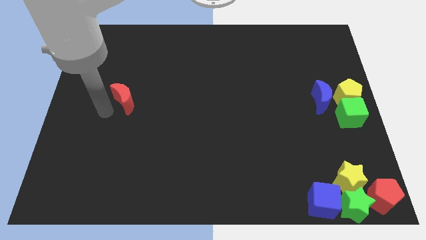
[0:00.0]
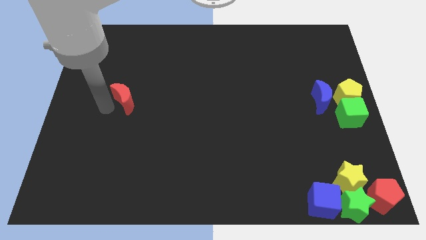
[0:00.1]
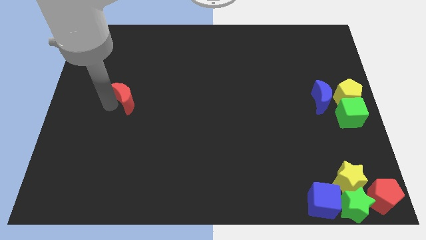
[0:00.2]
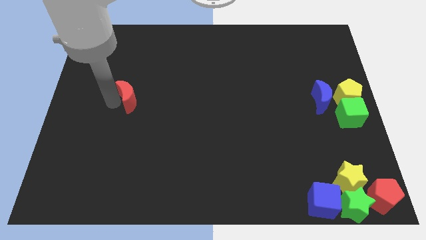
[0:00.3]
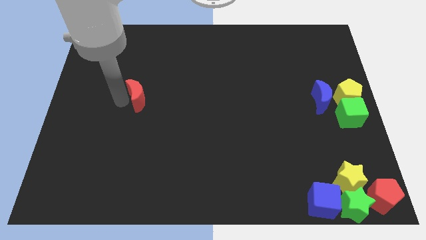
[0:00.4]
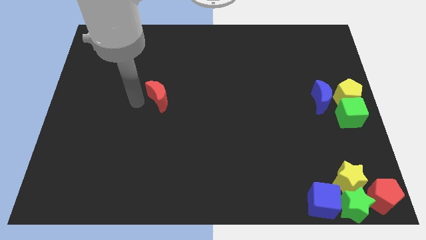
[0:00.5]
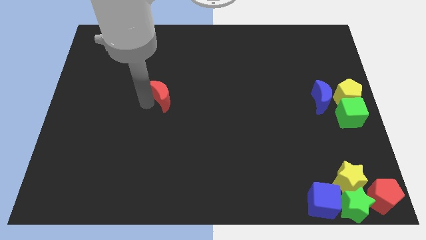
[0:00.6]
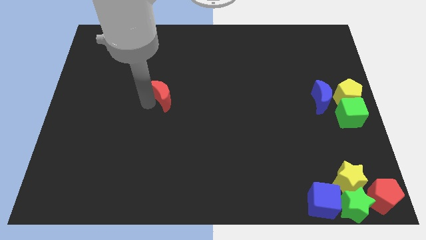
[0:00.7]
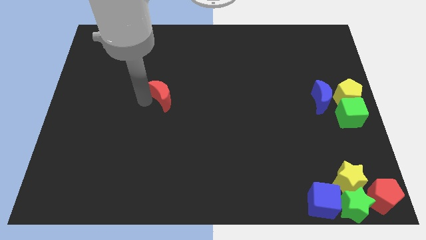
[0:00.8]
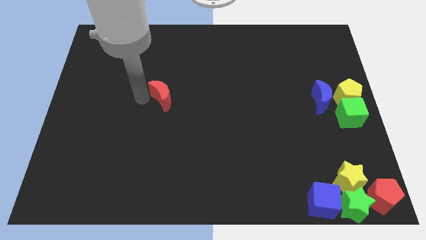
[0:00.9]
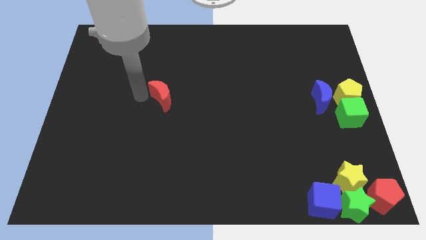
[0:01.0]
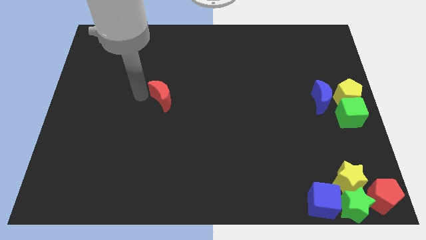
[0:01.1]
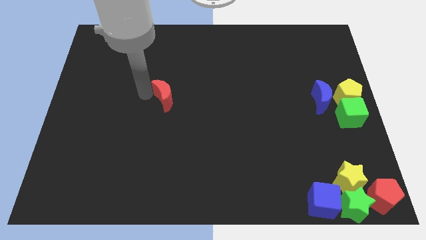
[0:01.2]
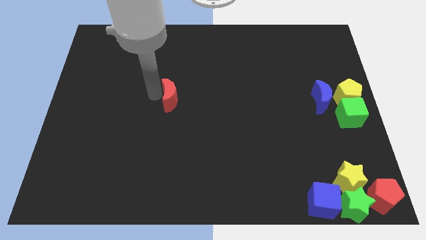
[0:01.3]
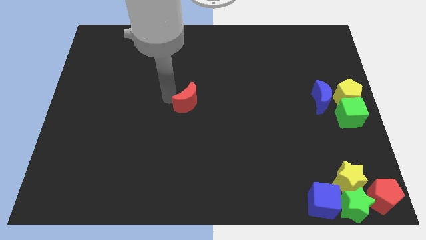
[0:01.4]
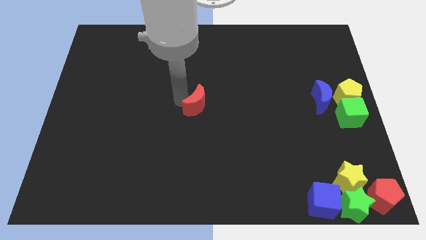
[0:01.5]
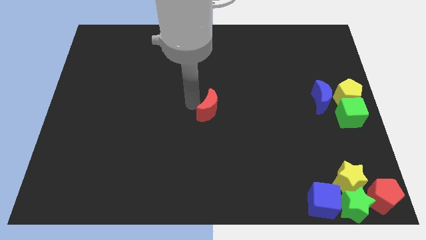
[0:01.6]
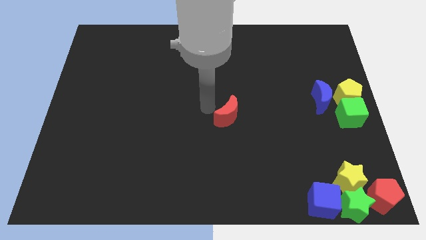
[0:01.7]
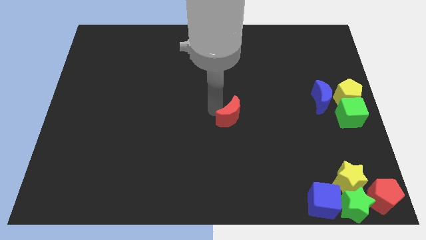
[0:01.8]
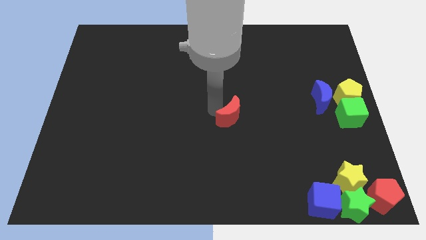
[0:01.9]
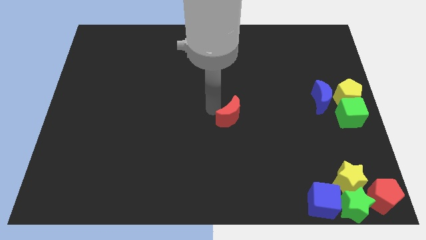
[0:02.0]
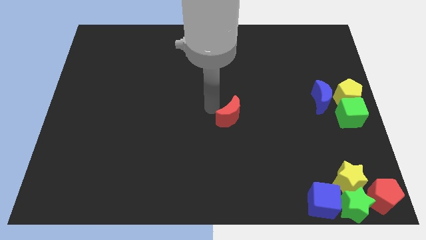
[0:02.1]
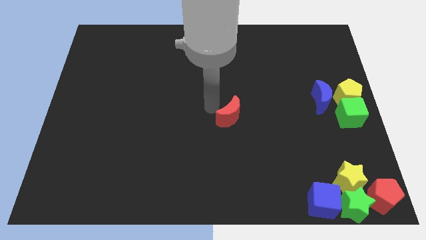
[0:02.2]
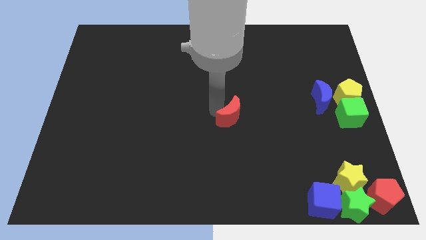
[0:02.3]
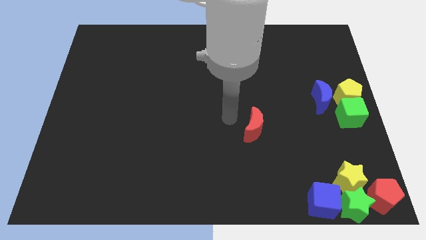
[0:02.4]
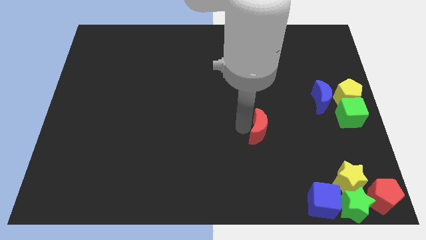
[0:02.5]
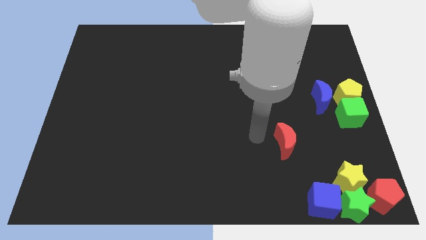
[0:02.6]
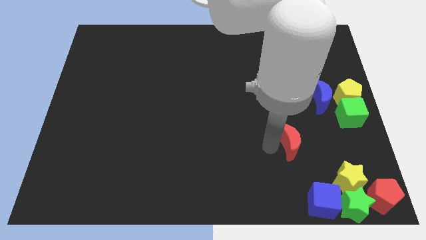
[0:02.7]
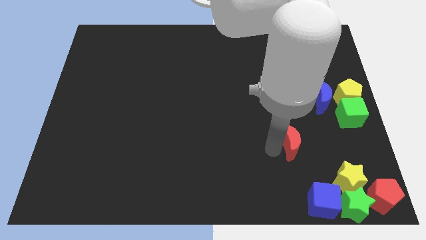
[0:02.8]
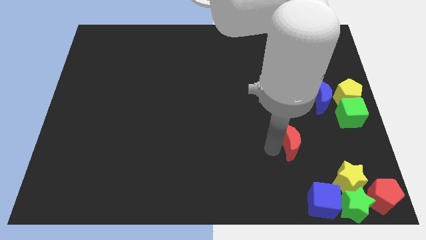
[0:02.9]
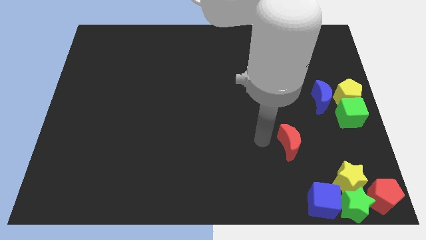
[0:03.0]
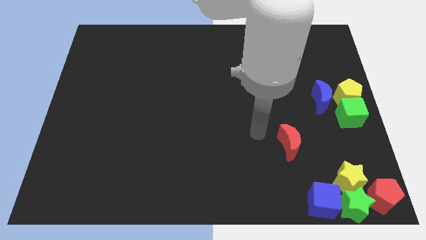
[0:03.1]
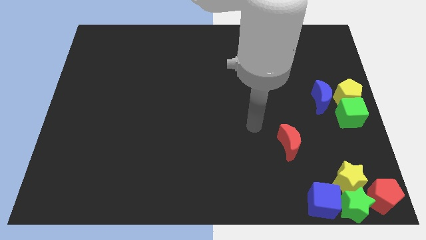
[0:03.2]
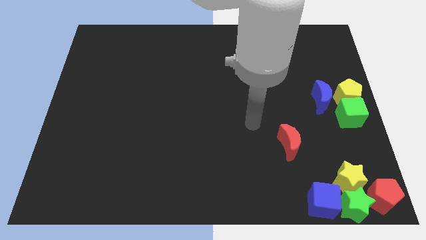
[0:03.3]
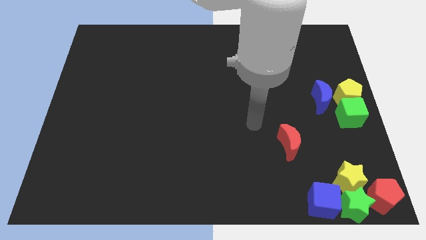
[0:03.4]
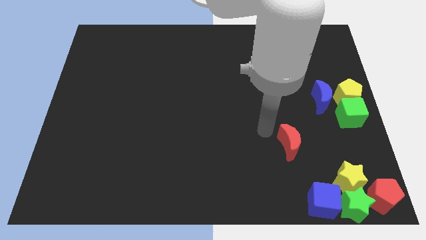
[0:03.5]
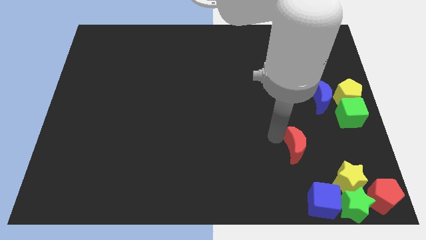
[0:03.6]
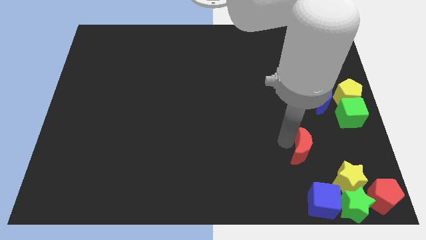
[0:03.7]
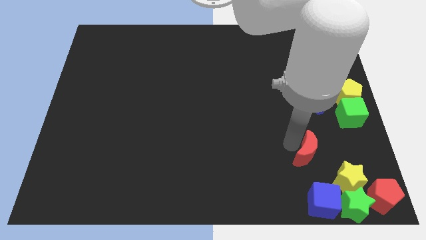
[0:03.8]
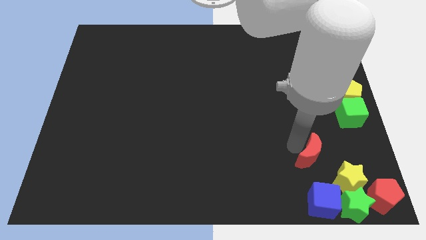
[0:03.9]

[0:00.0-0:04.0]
slide the red moon towards the yellow star

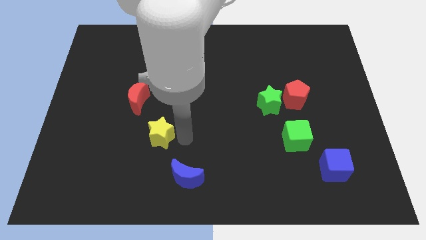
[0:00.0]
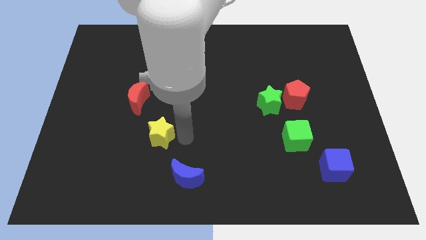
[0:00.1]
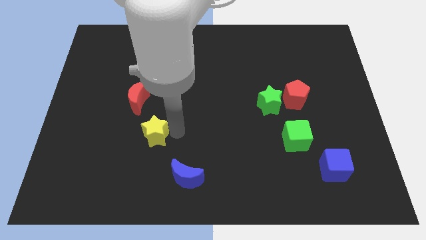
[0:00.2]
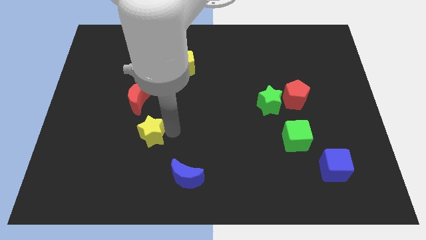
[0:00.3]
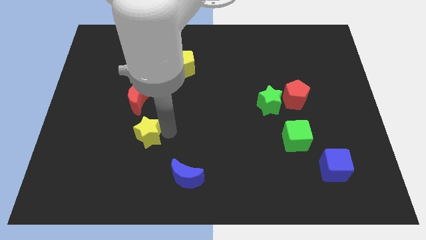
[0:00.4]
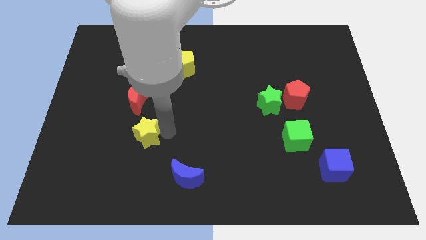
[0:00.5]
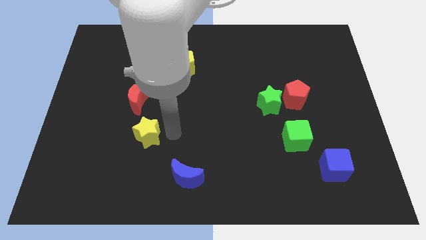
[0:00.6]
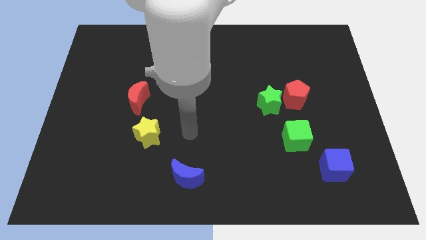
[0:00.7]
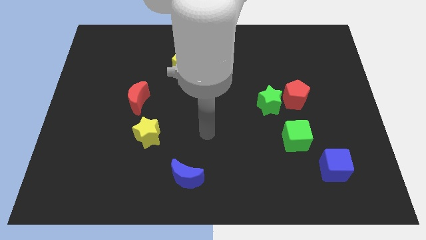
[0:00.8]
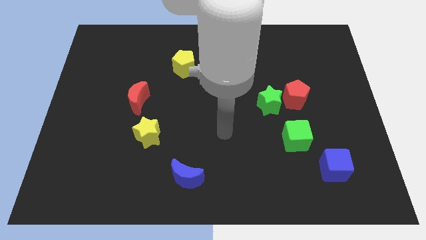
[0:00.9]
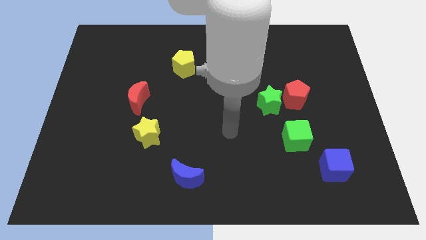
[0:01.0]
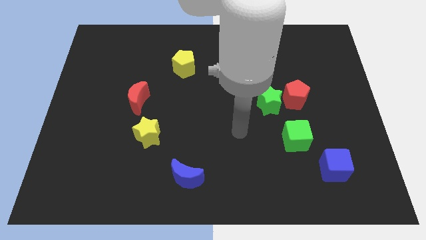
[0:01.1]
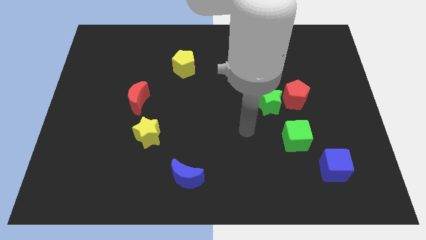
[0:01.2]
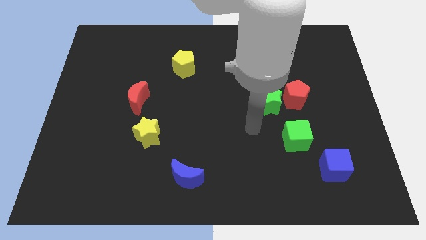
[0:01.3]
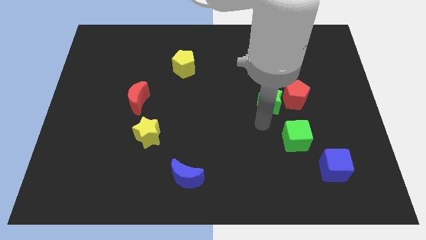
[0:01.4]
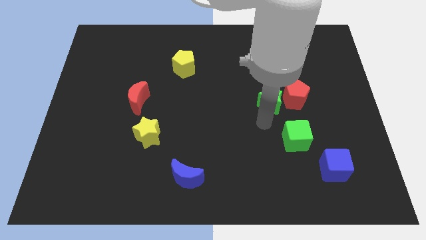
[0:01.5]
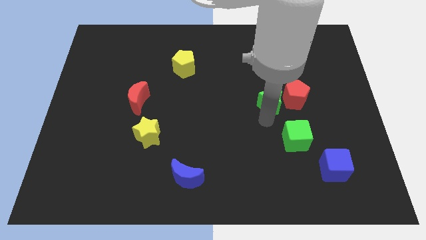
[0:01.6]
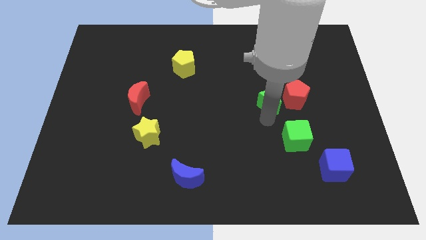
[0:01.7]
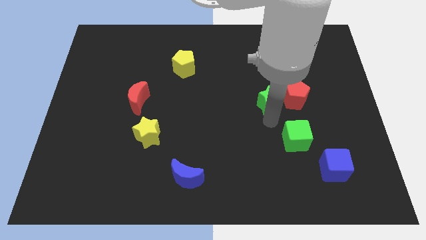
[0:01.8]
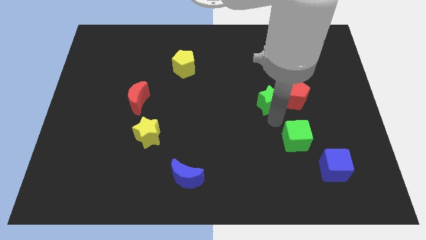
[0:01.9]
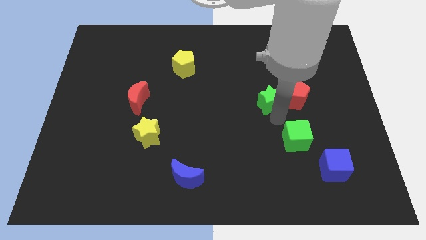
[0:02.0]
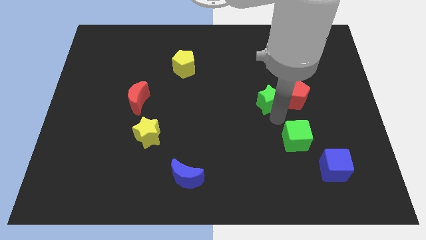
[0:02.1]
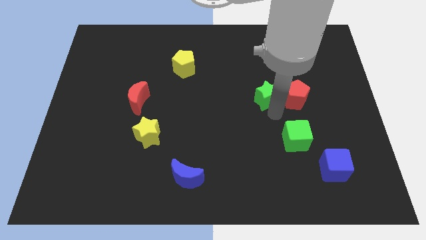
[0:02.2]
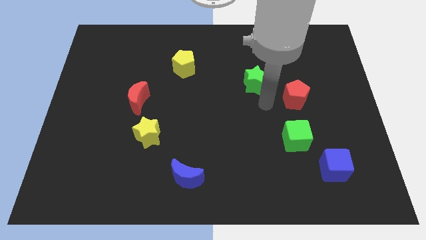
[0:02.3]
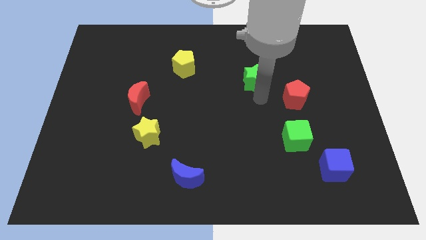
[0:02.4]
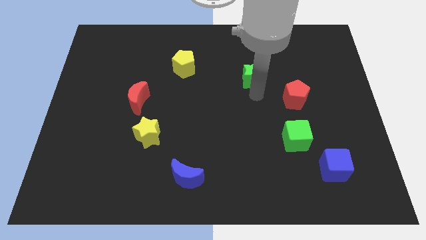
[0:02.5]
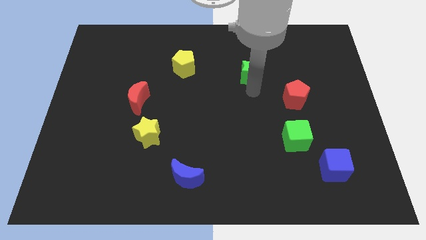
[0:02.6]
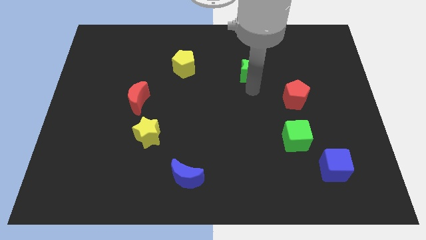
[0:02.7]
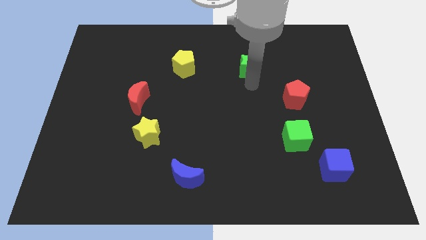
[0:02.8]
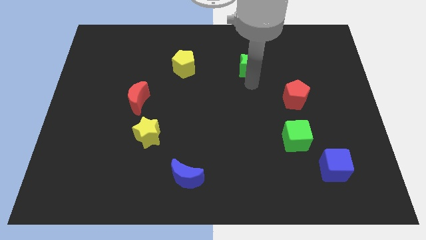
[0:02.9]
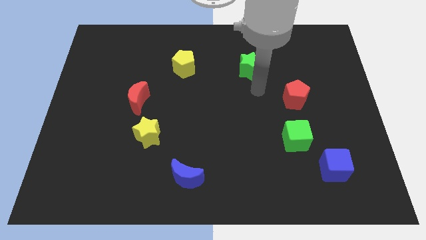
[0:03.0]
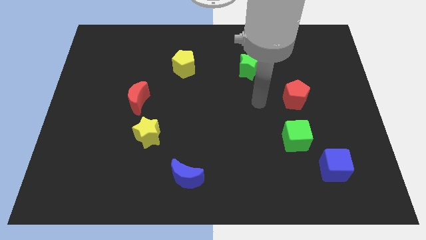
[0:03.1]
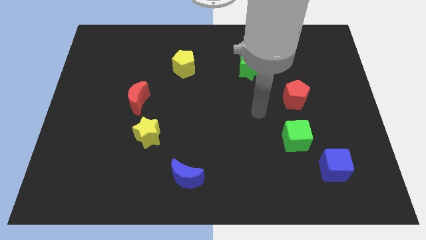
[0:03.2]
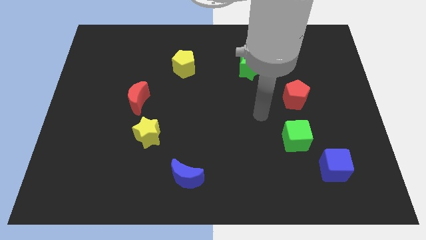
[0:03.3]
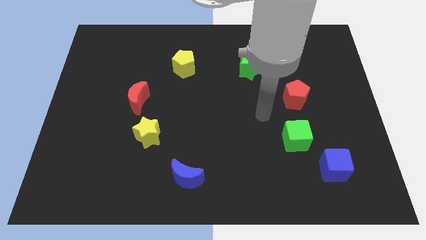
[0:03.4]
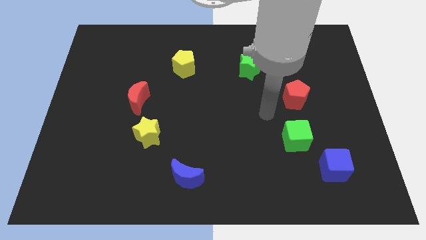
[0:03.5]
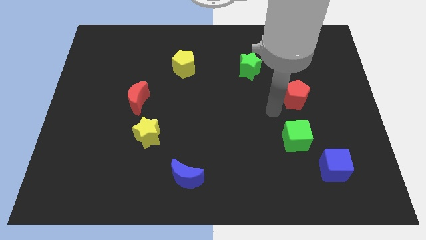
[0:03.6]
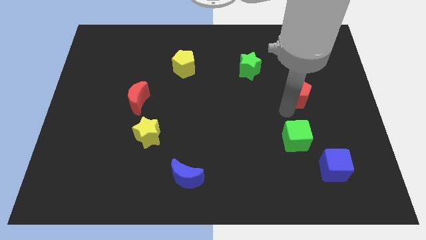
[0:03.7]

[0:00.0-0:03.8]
move the green star to the right of the yellow pentagon

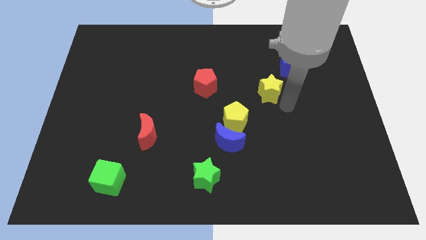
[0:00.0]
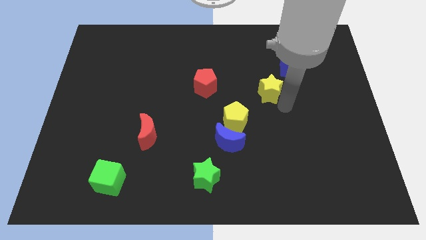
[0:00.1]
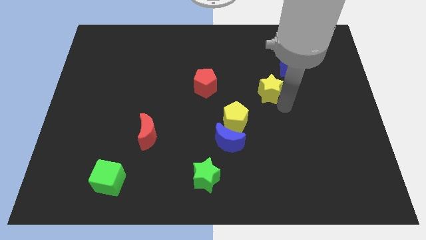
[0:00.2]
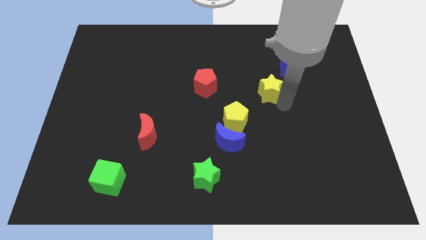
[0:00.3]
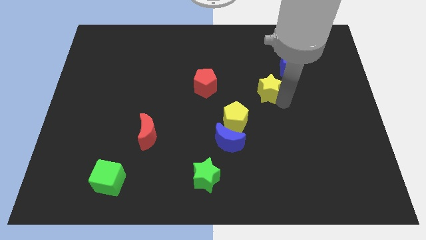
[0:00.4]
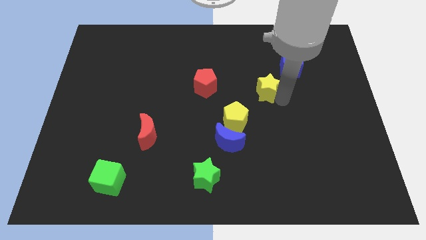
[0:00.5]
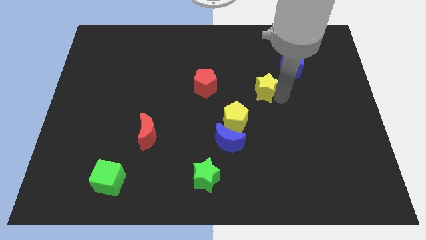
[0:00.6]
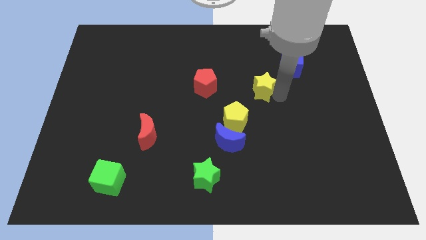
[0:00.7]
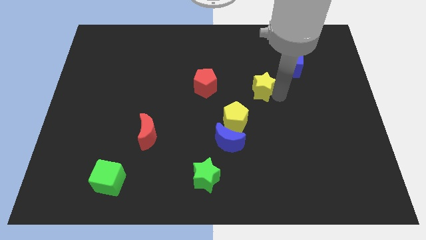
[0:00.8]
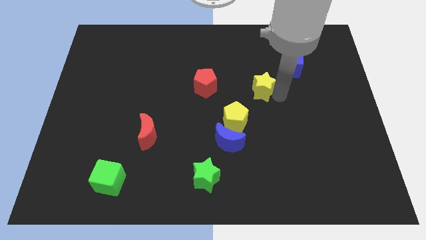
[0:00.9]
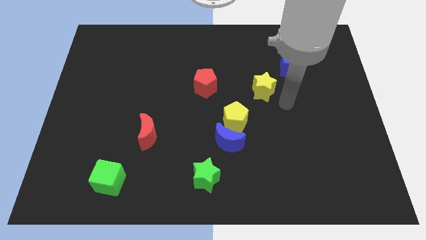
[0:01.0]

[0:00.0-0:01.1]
move yellow start in between yellow pentagon and blue cube

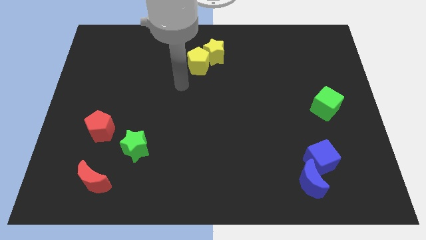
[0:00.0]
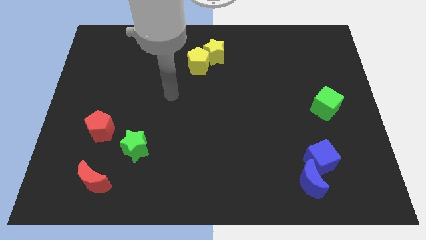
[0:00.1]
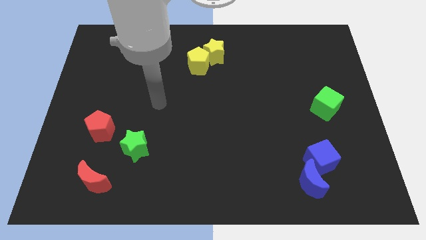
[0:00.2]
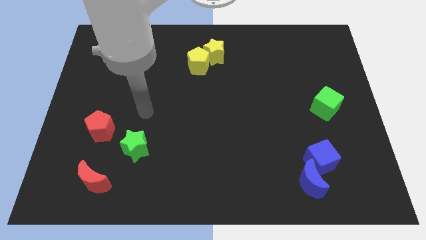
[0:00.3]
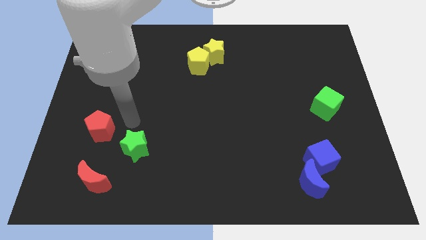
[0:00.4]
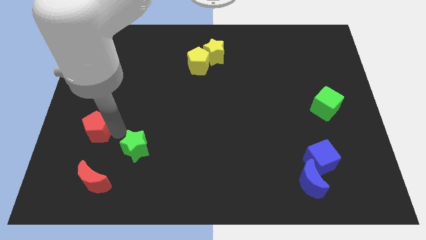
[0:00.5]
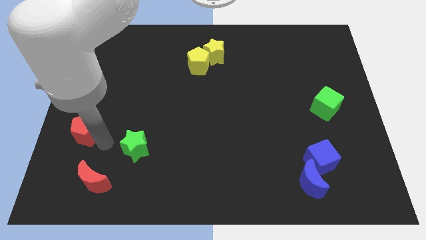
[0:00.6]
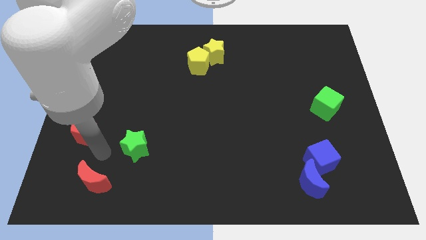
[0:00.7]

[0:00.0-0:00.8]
push the red pentagon diagonal to the red crescent
